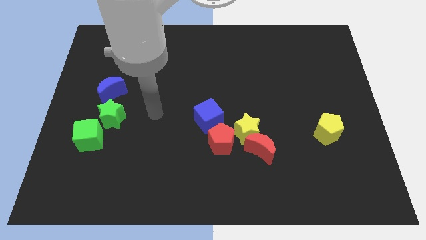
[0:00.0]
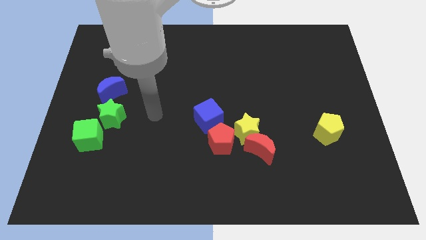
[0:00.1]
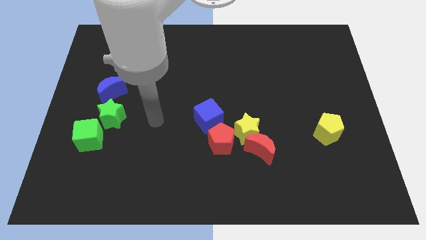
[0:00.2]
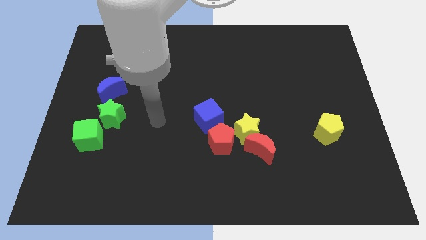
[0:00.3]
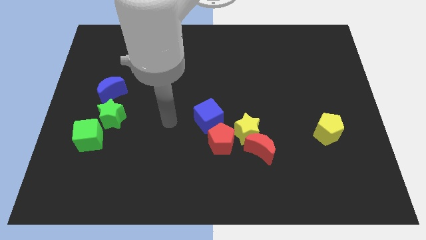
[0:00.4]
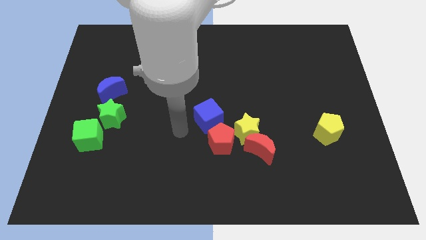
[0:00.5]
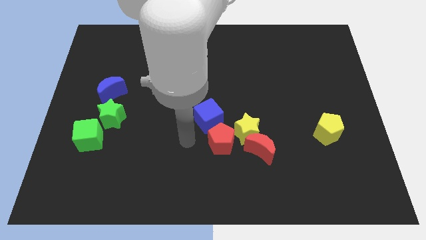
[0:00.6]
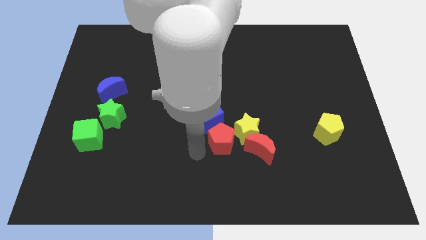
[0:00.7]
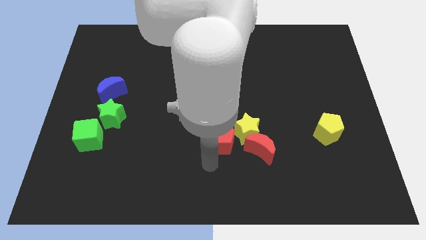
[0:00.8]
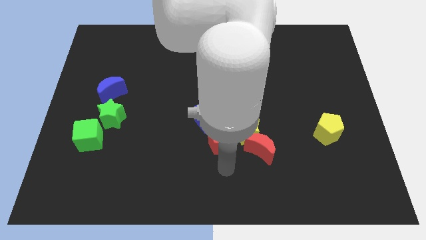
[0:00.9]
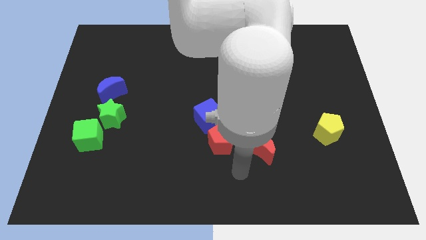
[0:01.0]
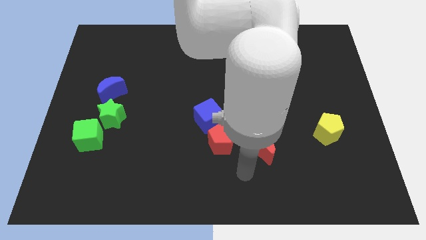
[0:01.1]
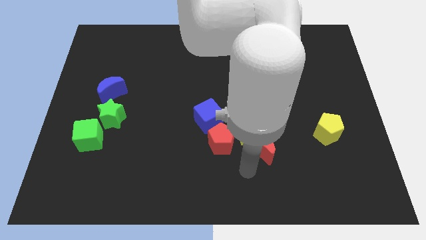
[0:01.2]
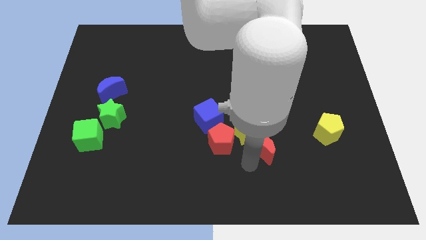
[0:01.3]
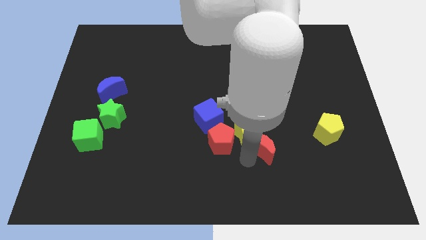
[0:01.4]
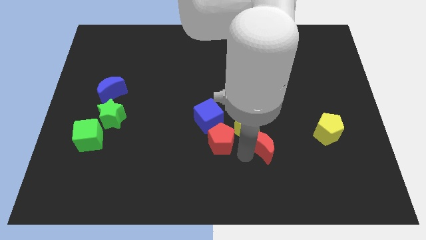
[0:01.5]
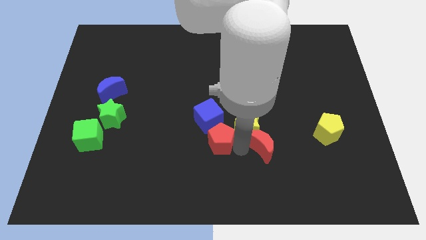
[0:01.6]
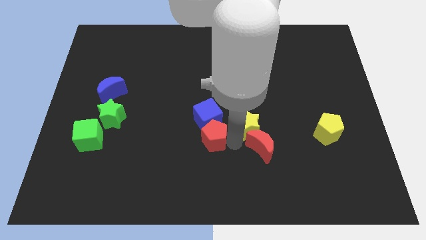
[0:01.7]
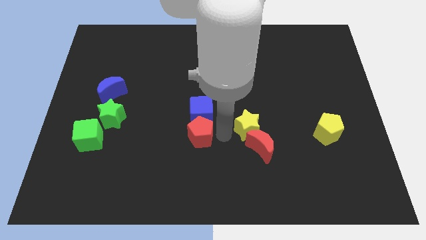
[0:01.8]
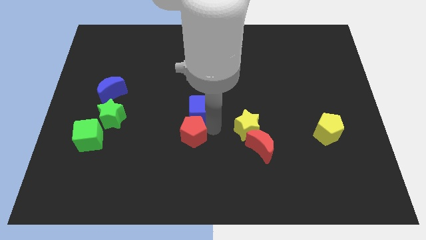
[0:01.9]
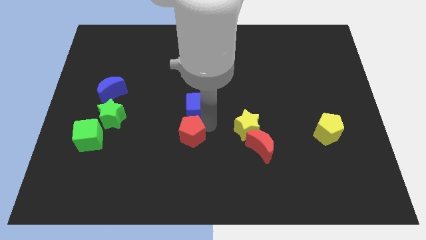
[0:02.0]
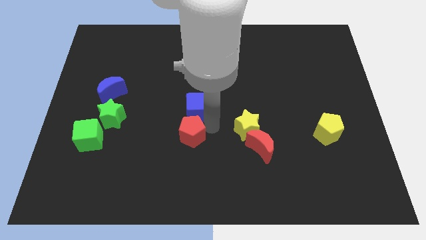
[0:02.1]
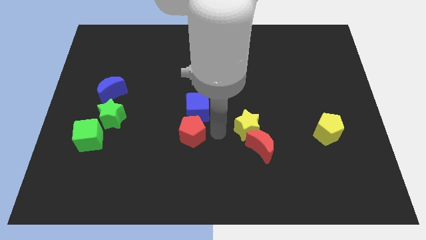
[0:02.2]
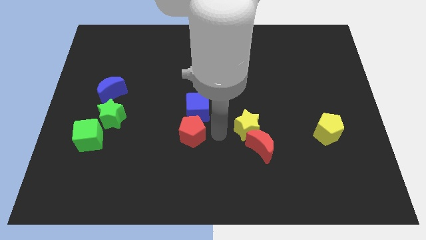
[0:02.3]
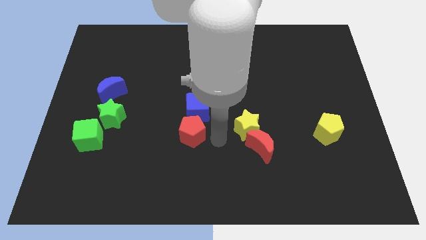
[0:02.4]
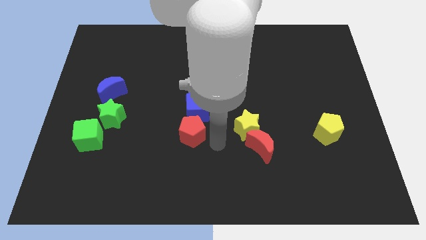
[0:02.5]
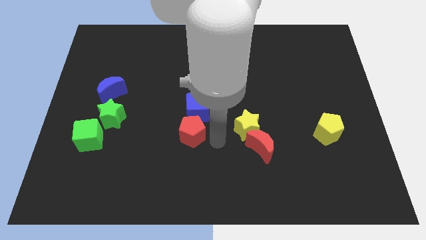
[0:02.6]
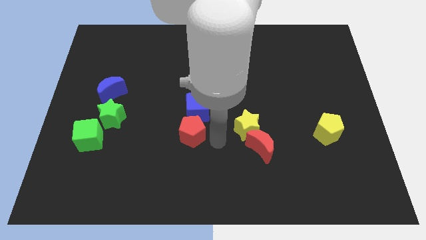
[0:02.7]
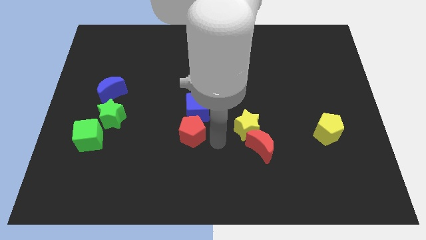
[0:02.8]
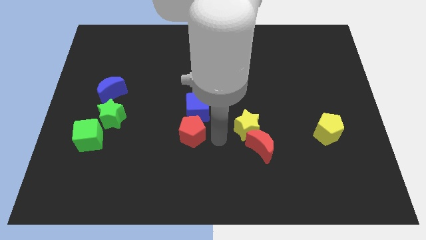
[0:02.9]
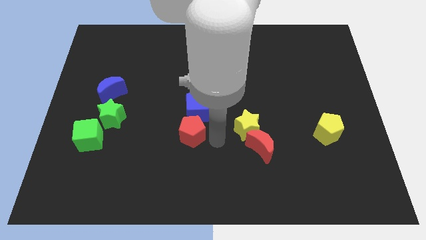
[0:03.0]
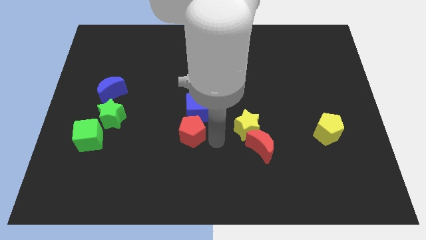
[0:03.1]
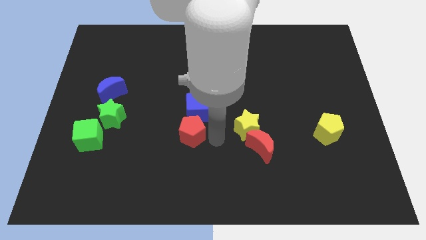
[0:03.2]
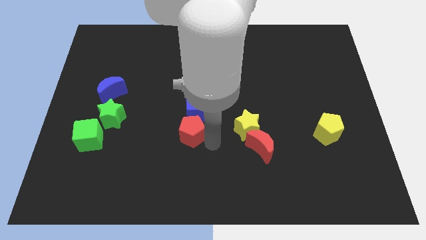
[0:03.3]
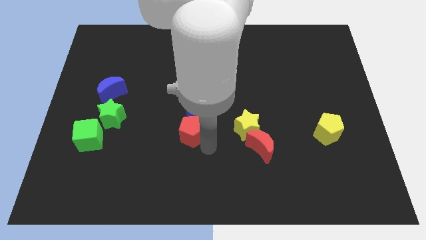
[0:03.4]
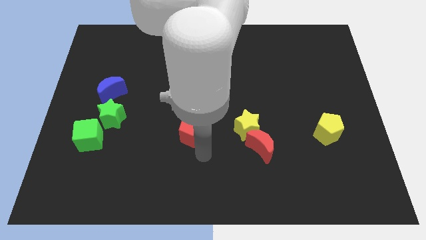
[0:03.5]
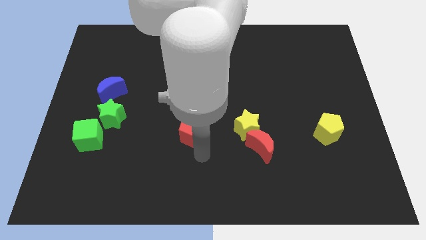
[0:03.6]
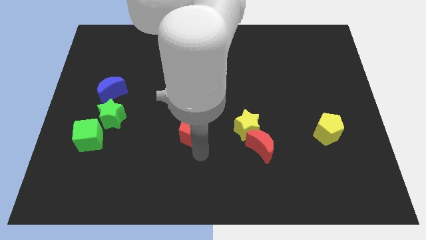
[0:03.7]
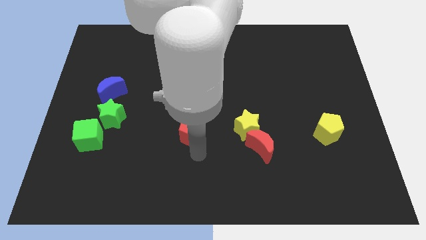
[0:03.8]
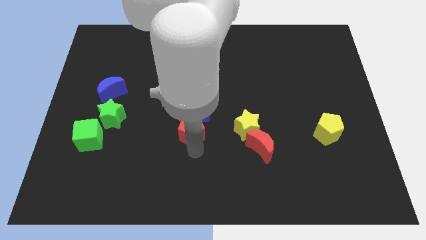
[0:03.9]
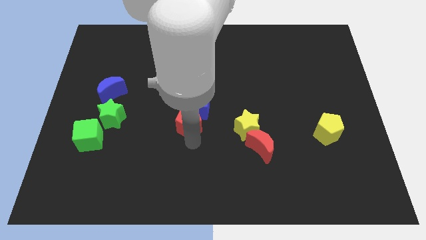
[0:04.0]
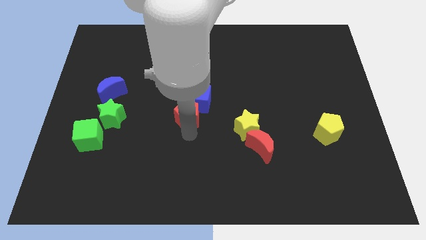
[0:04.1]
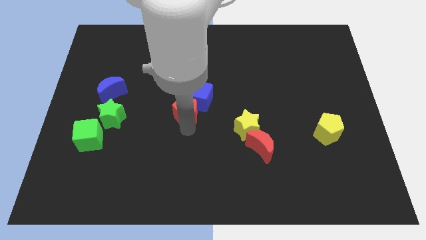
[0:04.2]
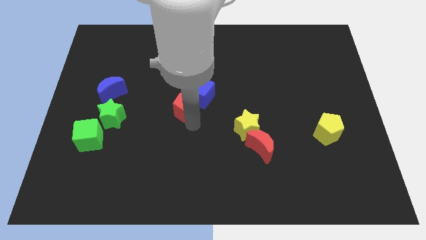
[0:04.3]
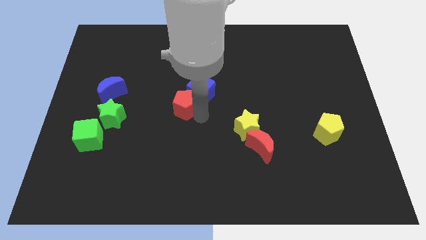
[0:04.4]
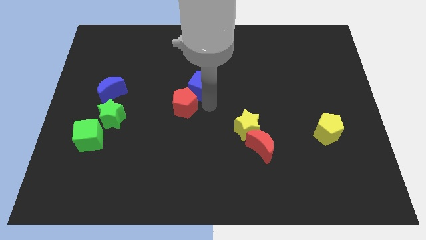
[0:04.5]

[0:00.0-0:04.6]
push the red pentagon and blue cube to the center of the board

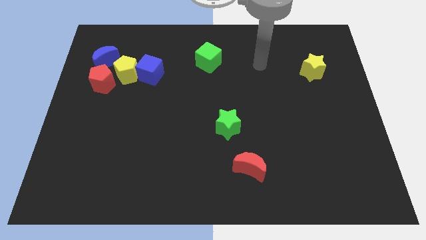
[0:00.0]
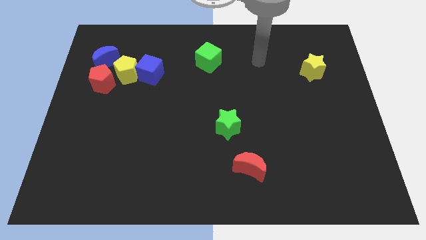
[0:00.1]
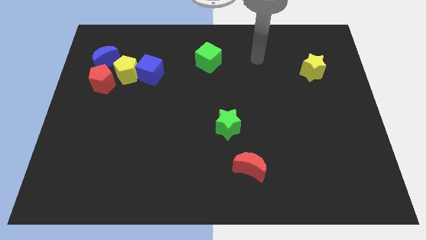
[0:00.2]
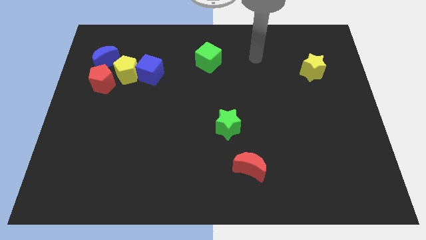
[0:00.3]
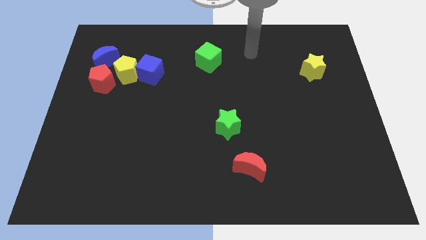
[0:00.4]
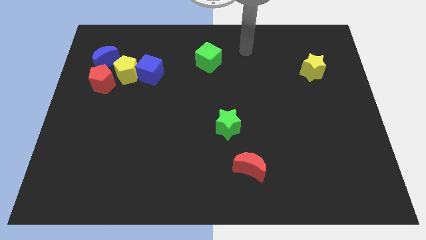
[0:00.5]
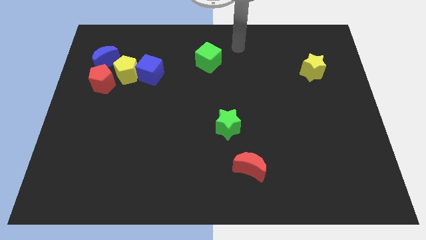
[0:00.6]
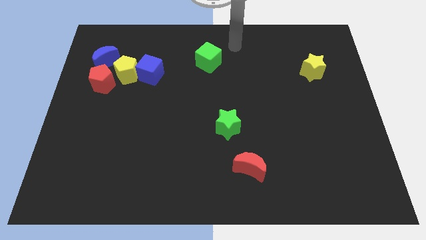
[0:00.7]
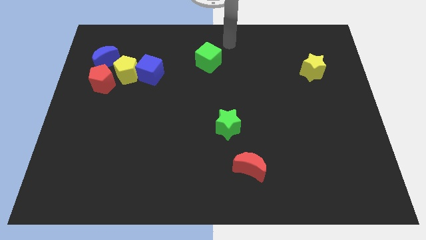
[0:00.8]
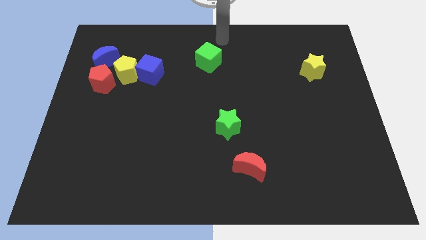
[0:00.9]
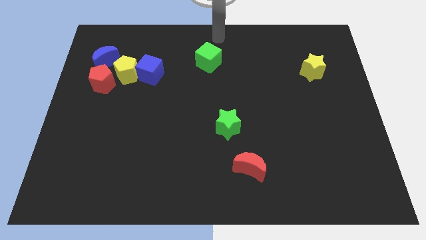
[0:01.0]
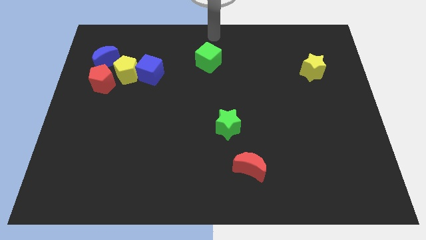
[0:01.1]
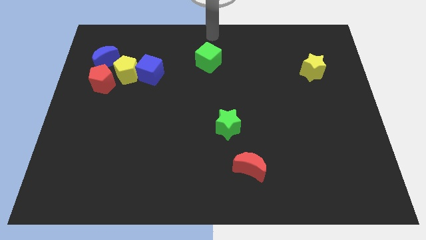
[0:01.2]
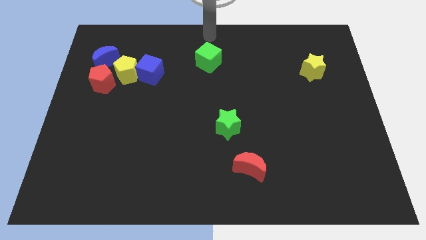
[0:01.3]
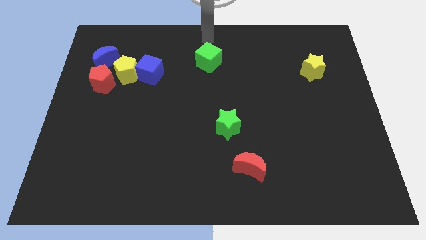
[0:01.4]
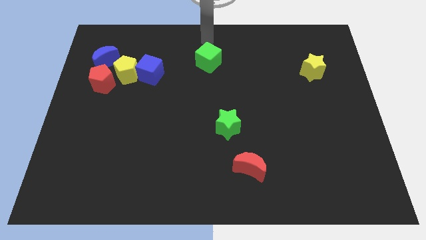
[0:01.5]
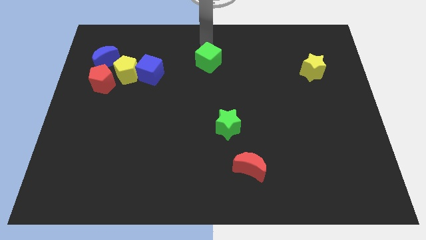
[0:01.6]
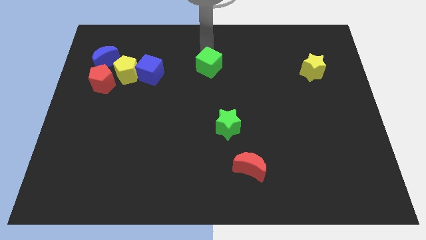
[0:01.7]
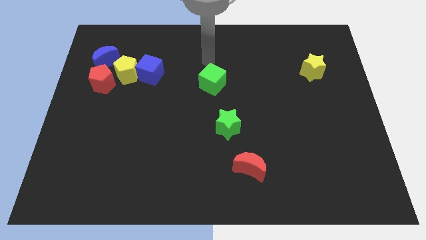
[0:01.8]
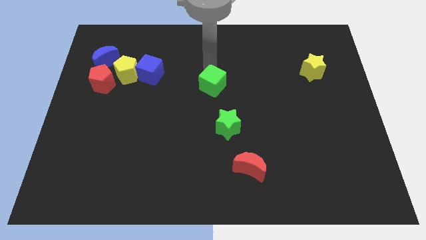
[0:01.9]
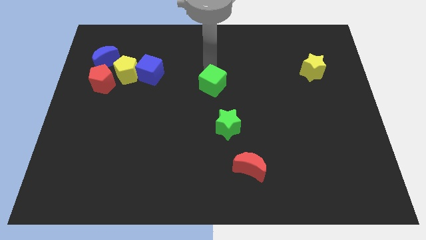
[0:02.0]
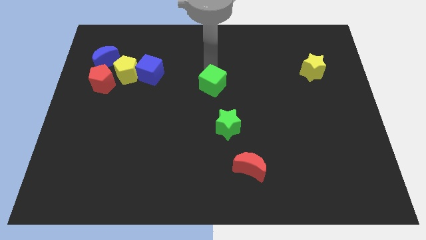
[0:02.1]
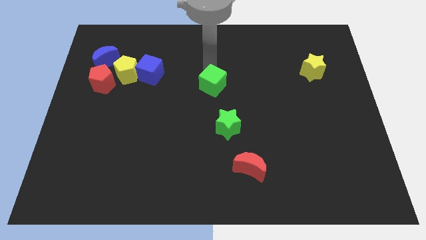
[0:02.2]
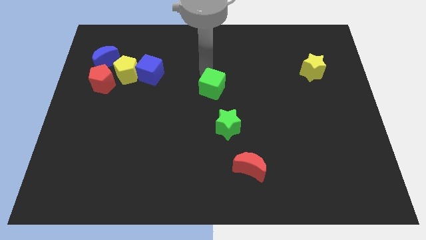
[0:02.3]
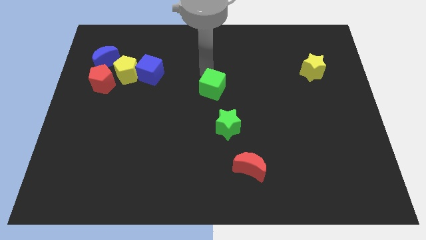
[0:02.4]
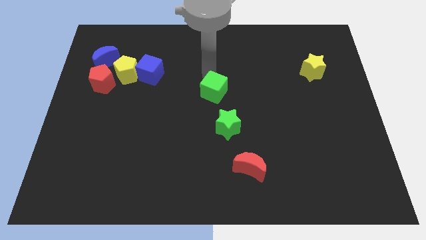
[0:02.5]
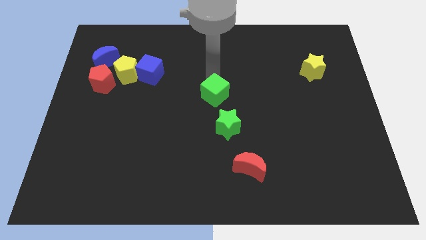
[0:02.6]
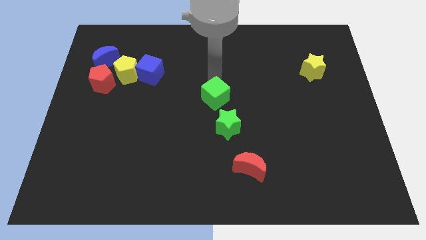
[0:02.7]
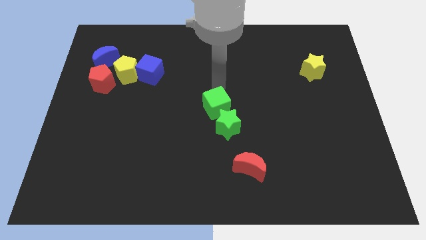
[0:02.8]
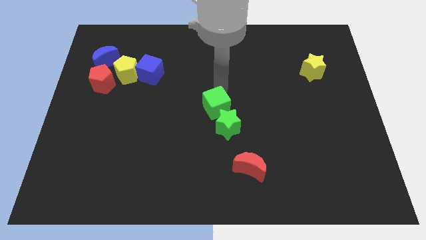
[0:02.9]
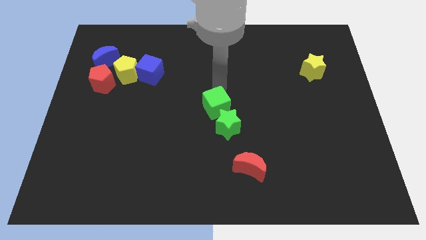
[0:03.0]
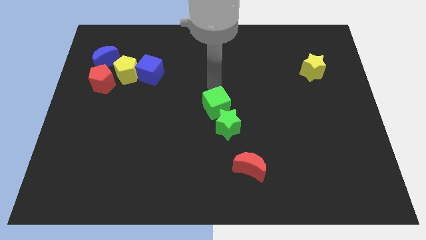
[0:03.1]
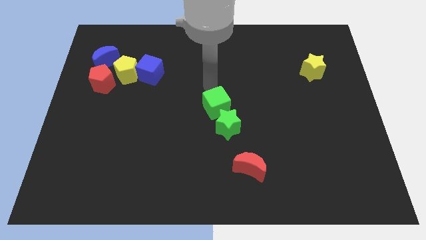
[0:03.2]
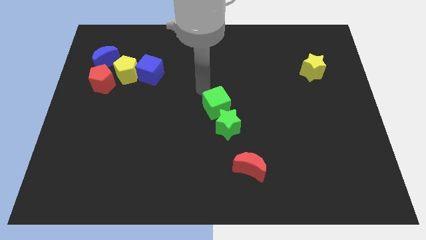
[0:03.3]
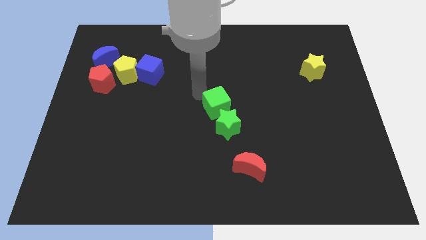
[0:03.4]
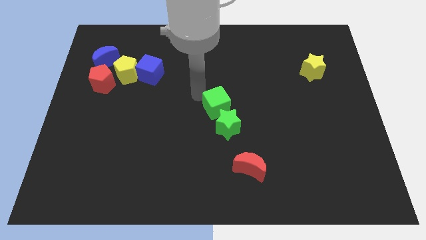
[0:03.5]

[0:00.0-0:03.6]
slide the green cube to the top left of the green star

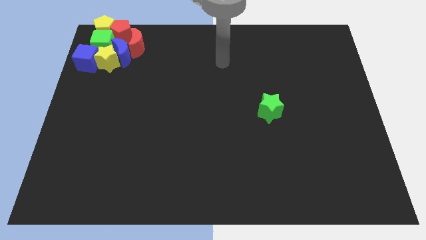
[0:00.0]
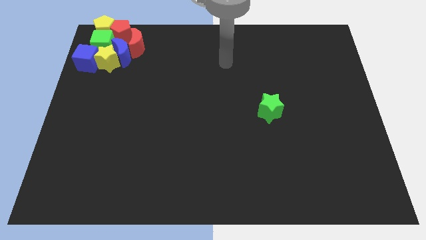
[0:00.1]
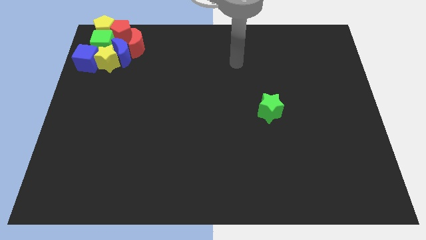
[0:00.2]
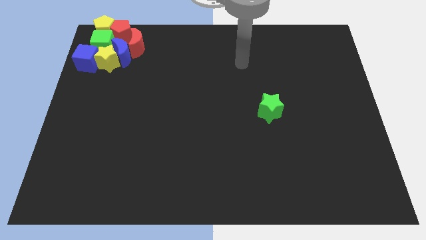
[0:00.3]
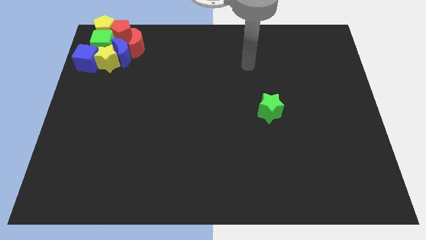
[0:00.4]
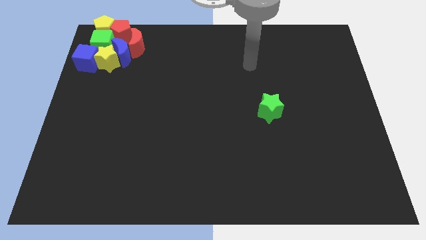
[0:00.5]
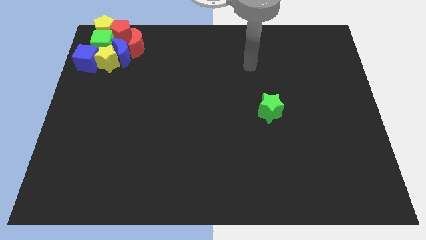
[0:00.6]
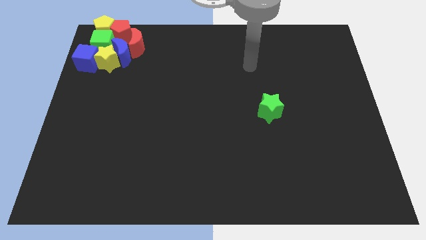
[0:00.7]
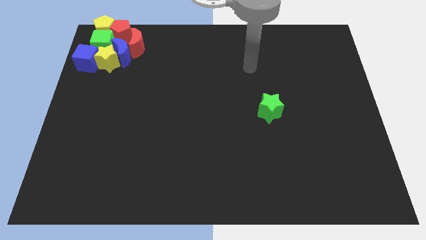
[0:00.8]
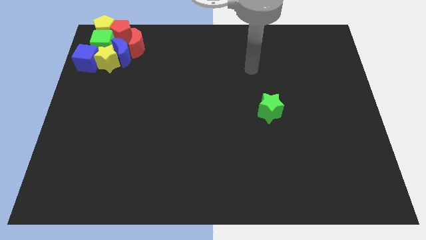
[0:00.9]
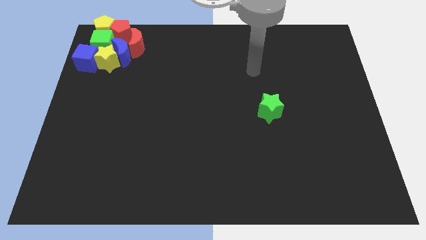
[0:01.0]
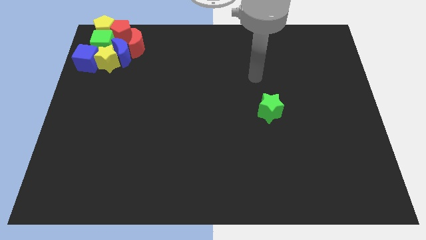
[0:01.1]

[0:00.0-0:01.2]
move the arm towards the green star
